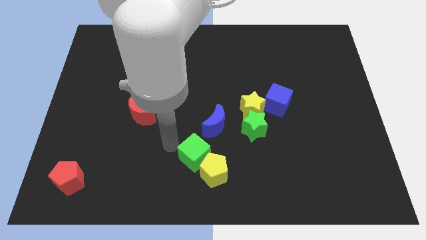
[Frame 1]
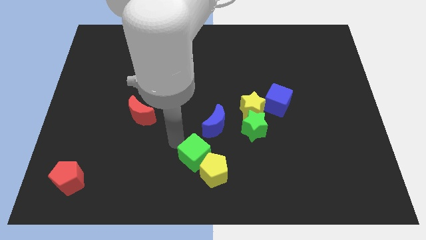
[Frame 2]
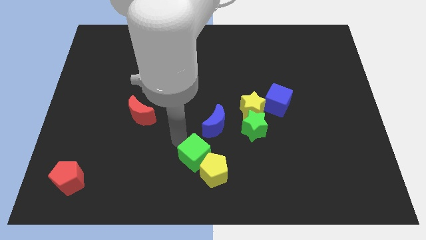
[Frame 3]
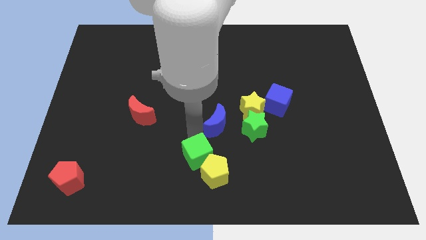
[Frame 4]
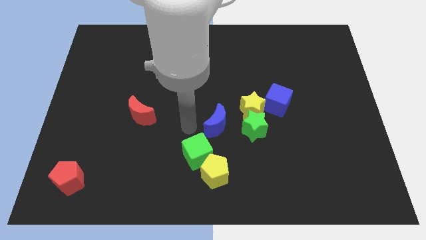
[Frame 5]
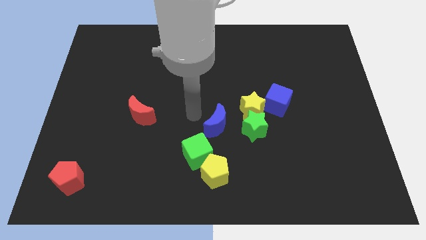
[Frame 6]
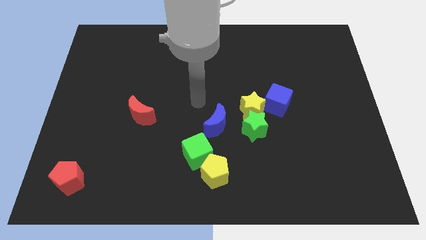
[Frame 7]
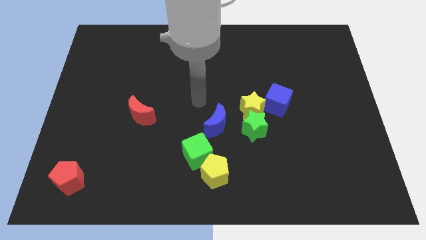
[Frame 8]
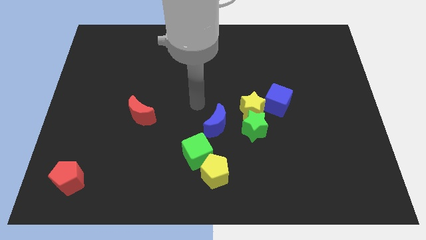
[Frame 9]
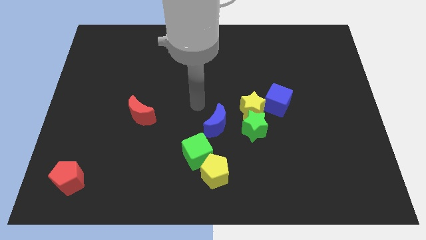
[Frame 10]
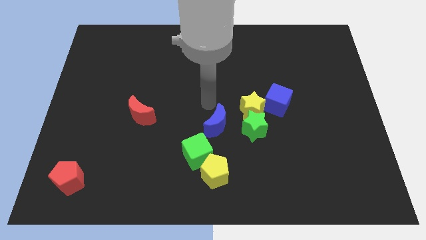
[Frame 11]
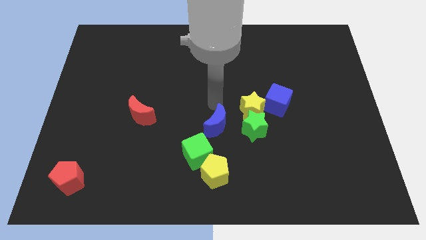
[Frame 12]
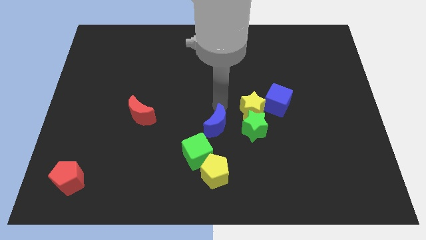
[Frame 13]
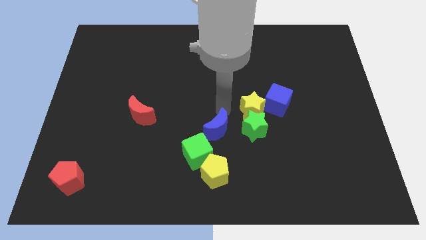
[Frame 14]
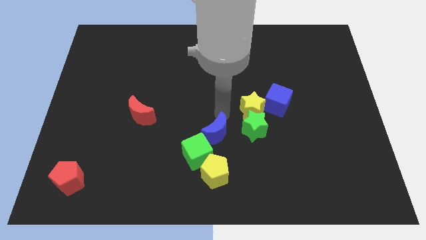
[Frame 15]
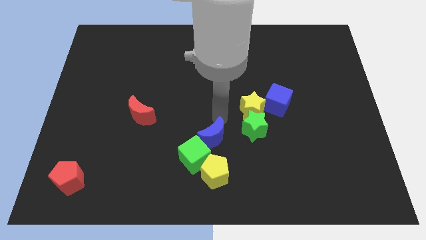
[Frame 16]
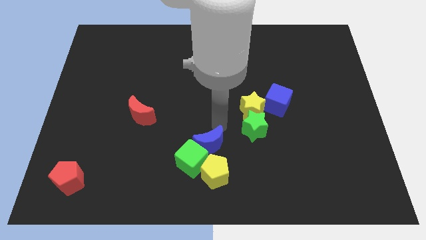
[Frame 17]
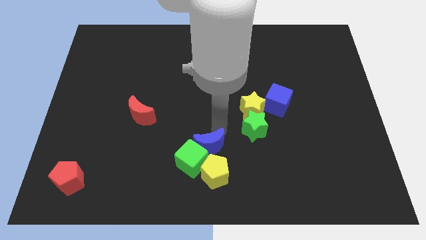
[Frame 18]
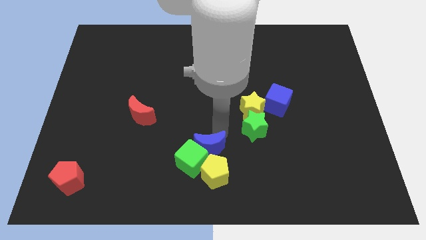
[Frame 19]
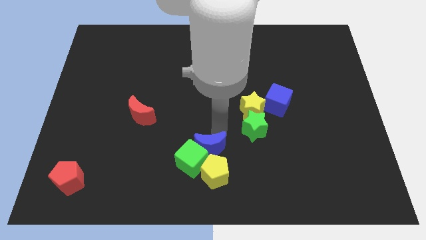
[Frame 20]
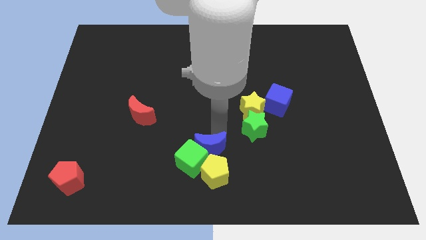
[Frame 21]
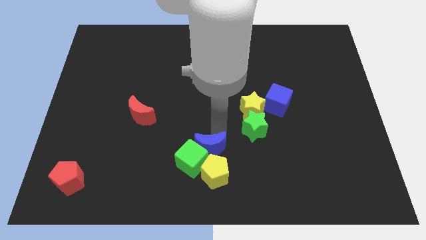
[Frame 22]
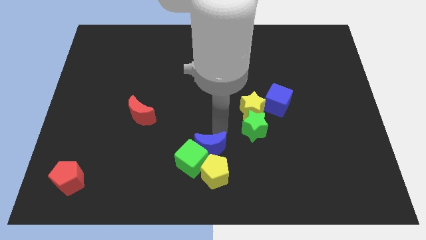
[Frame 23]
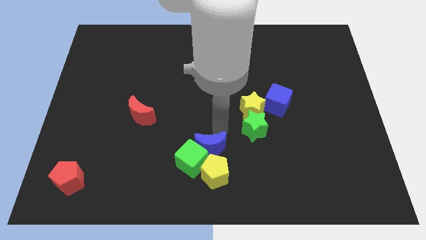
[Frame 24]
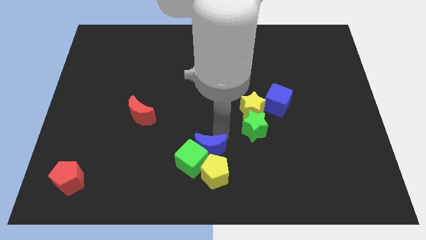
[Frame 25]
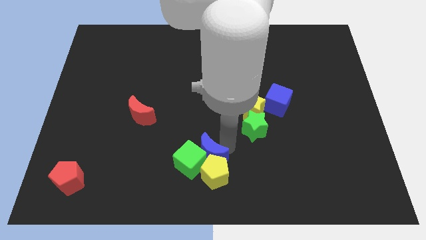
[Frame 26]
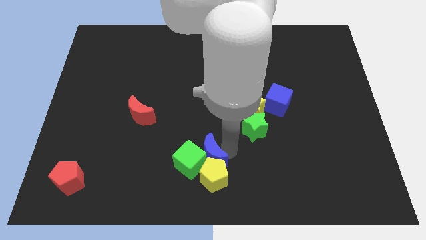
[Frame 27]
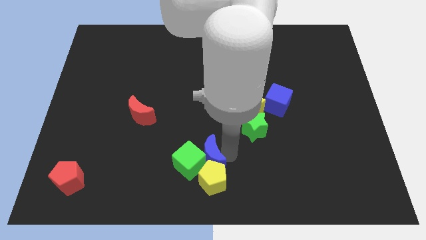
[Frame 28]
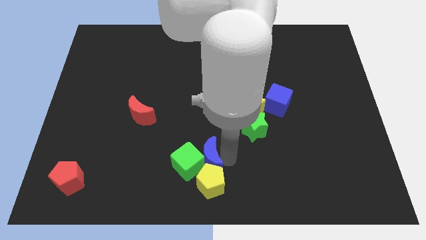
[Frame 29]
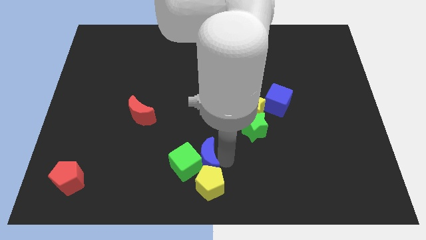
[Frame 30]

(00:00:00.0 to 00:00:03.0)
place the blue moon diagonal to the green star

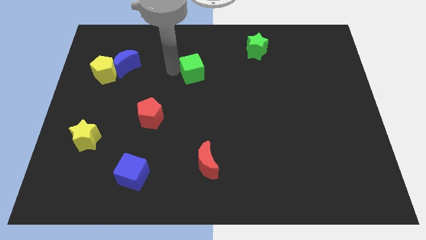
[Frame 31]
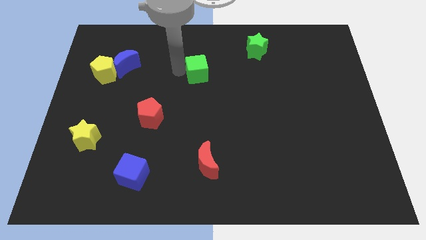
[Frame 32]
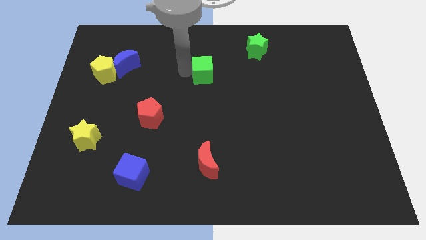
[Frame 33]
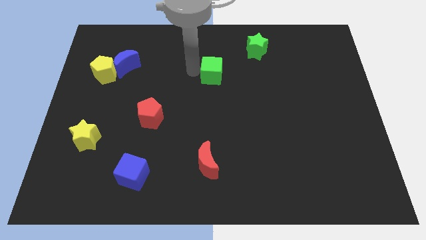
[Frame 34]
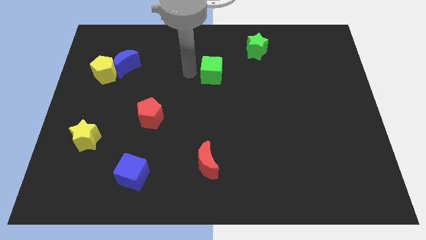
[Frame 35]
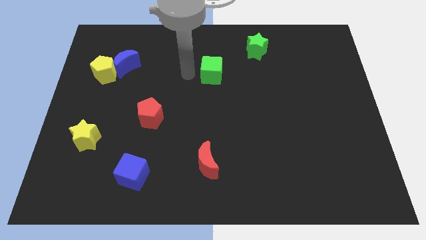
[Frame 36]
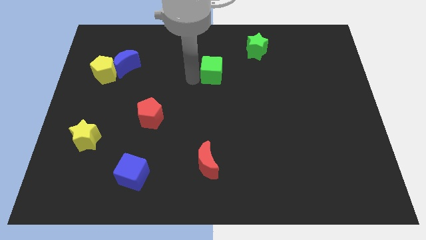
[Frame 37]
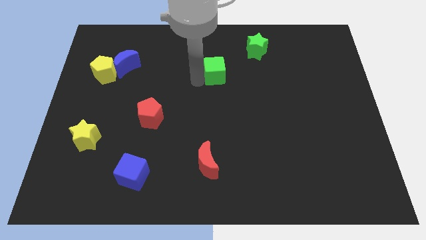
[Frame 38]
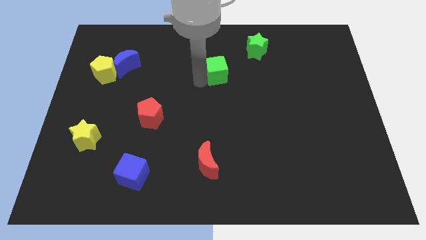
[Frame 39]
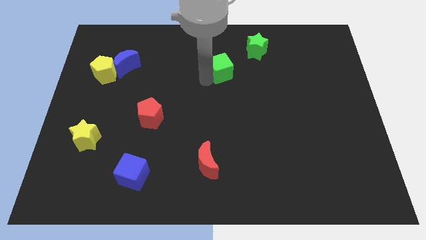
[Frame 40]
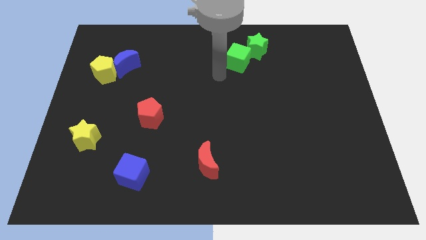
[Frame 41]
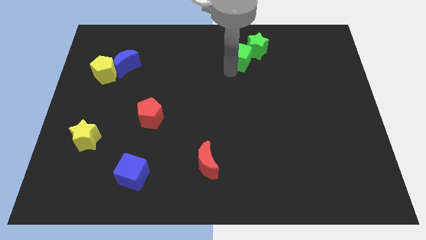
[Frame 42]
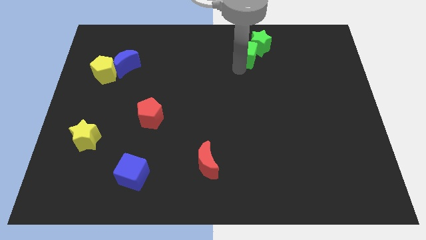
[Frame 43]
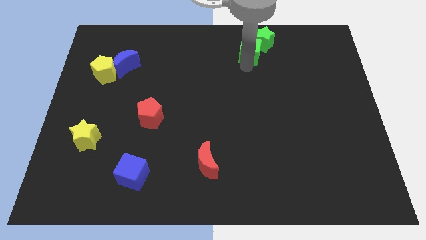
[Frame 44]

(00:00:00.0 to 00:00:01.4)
move the green cube below the green star

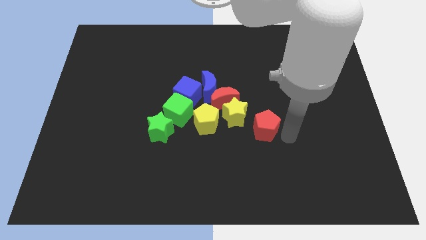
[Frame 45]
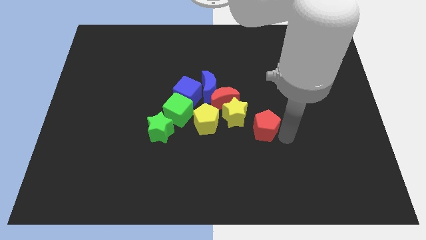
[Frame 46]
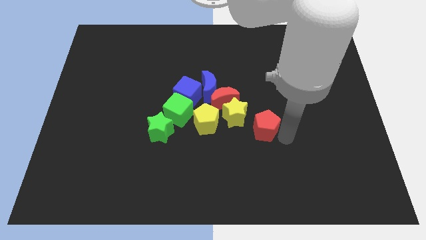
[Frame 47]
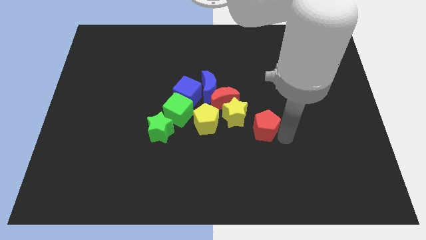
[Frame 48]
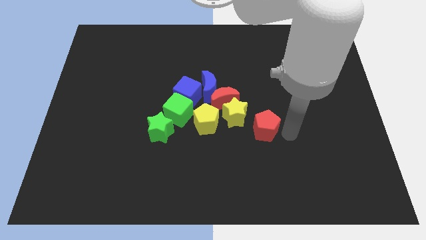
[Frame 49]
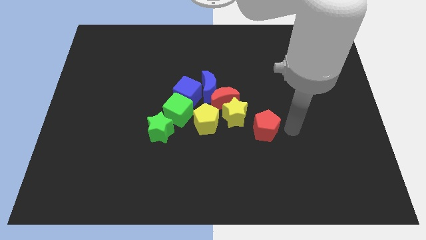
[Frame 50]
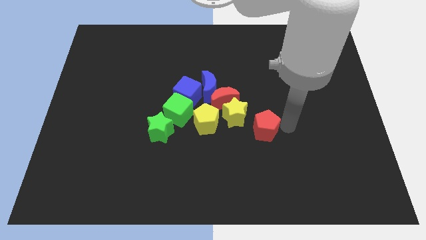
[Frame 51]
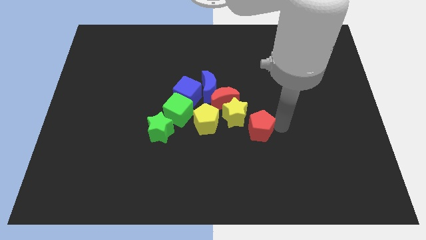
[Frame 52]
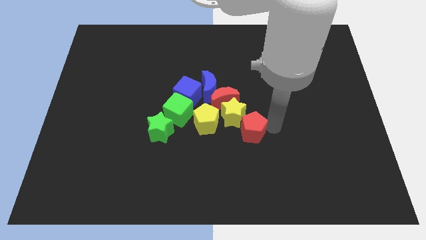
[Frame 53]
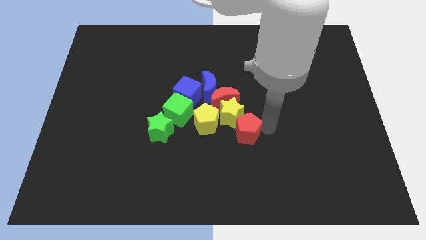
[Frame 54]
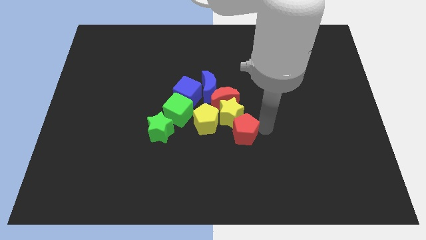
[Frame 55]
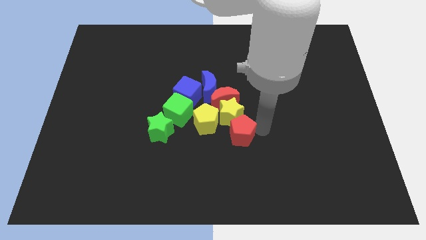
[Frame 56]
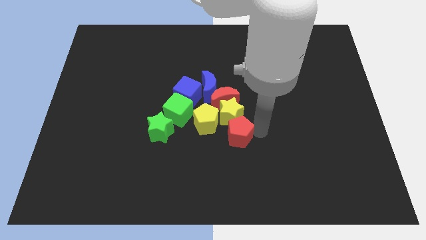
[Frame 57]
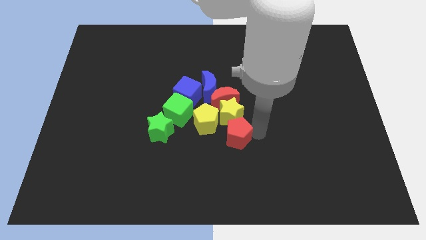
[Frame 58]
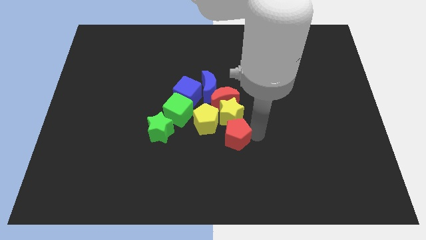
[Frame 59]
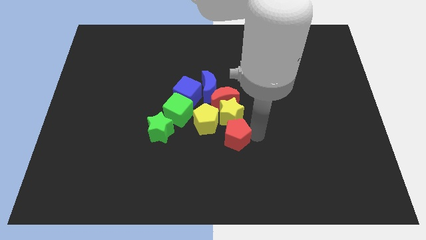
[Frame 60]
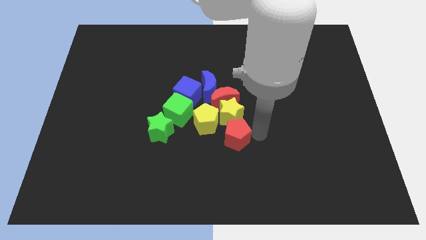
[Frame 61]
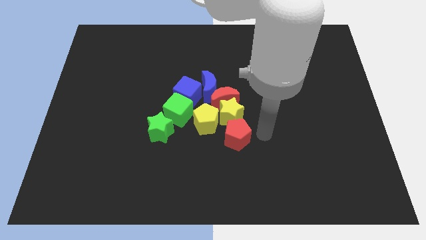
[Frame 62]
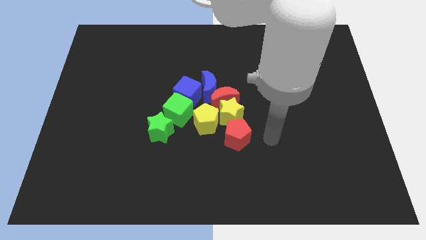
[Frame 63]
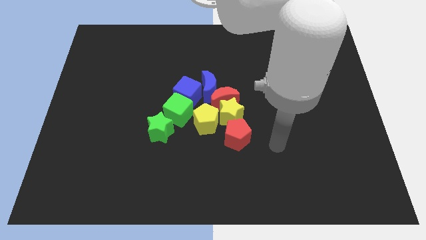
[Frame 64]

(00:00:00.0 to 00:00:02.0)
move the red pentagon to the bottom of the yellow star

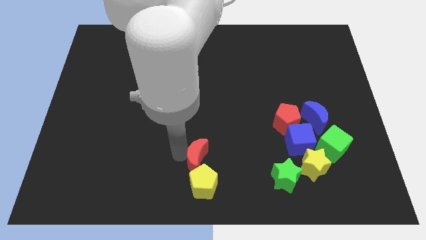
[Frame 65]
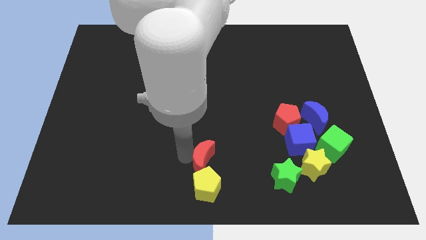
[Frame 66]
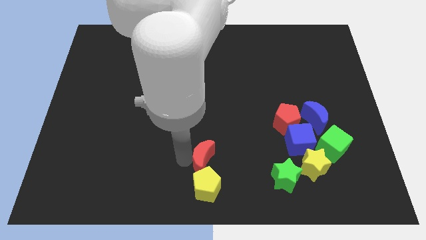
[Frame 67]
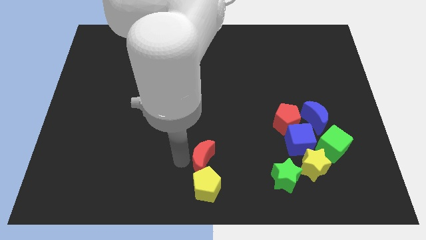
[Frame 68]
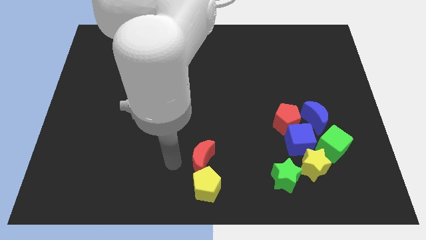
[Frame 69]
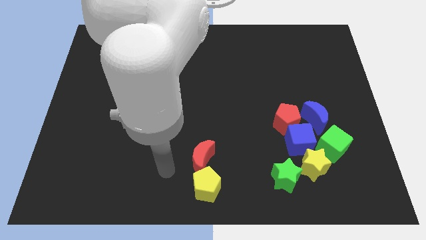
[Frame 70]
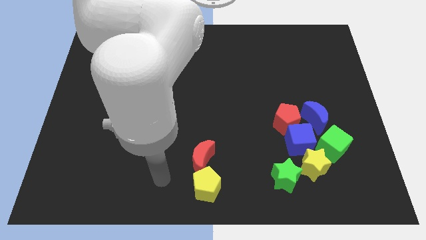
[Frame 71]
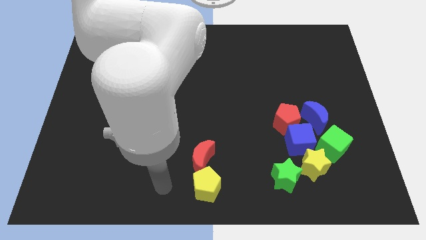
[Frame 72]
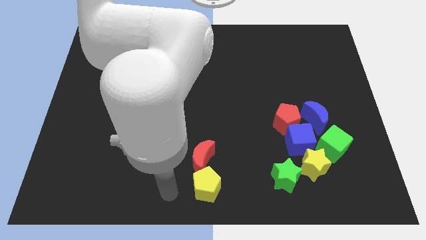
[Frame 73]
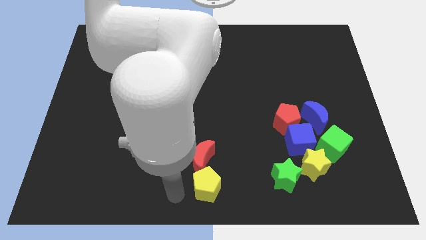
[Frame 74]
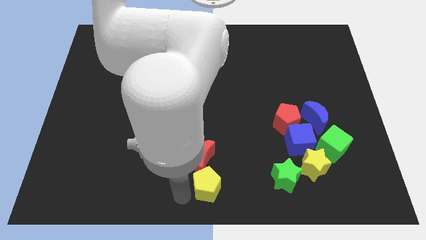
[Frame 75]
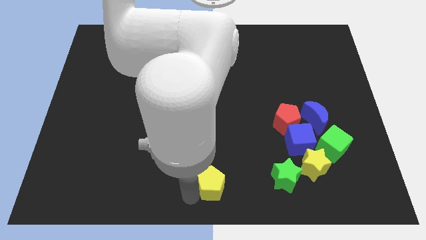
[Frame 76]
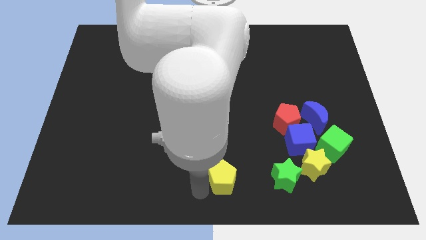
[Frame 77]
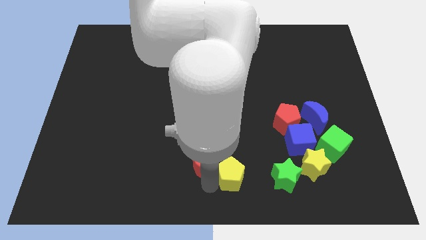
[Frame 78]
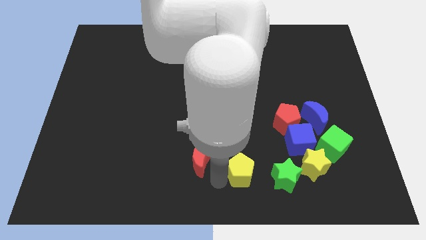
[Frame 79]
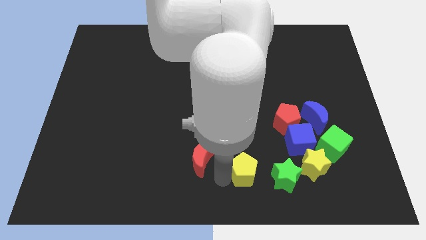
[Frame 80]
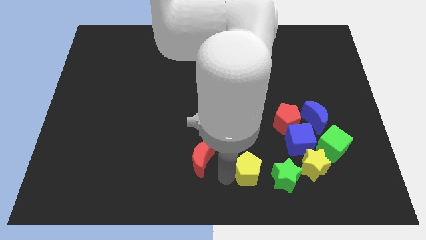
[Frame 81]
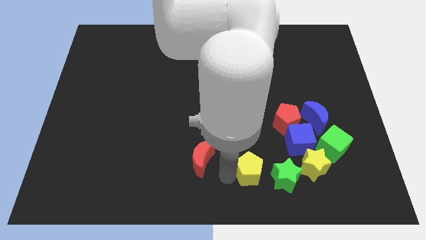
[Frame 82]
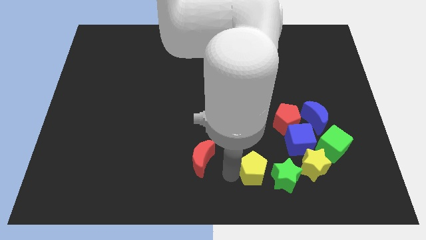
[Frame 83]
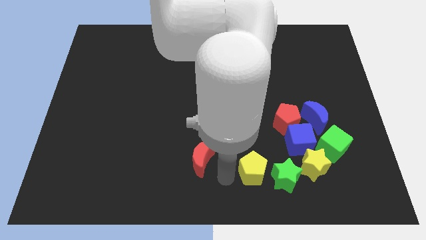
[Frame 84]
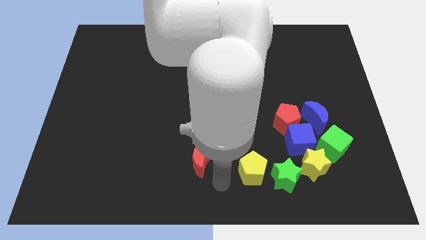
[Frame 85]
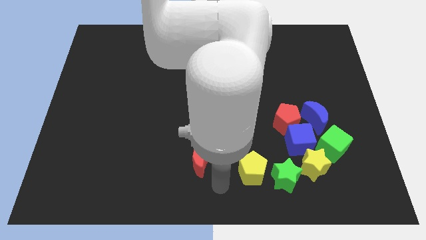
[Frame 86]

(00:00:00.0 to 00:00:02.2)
push the yellow pentagon to the left of the green star

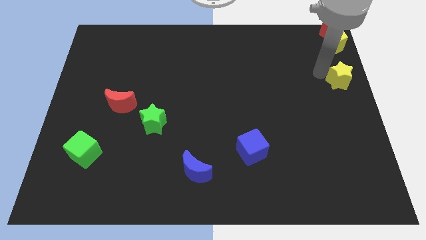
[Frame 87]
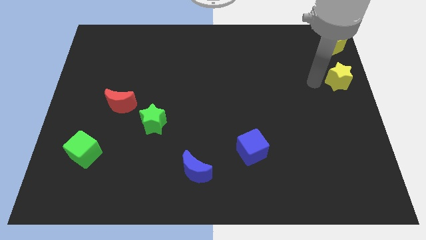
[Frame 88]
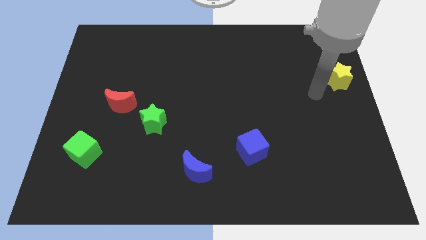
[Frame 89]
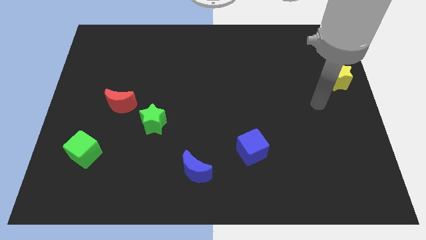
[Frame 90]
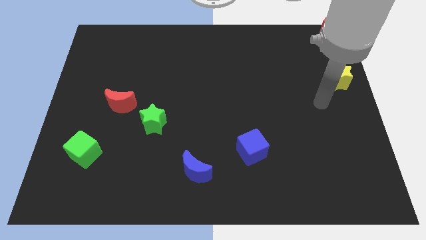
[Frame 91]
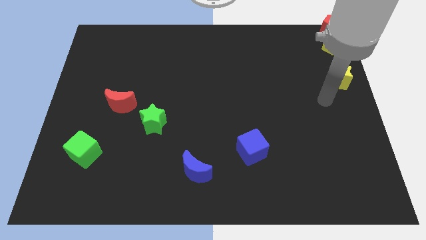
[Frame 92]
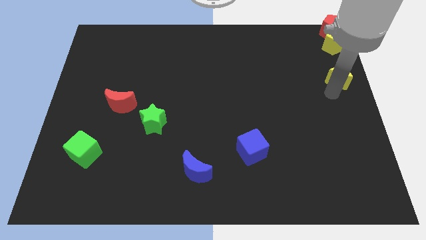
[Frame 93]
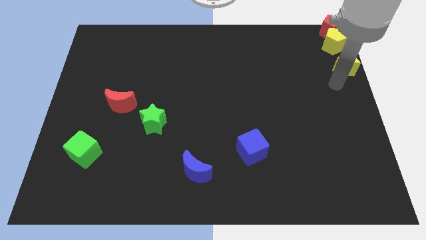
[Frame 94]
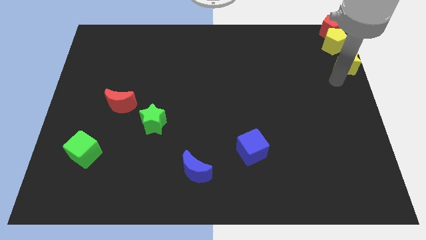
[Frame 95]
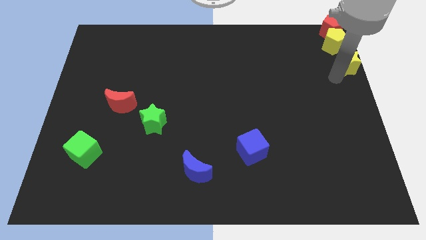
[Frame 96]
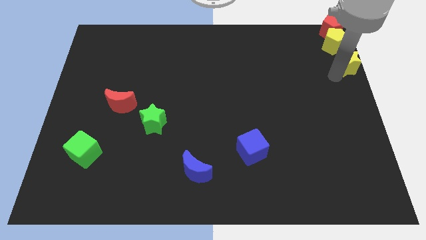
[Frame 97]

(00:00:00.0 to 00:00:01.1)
move the yellow star towards the bottom side of the yellow pentagon
